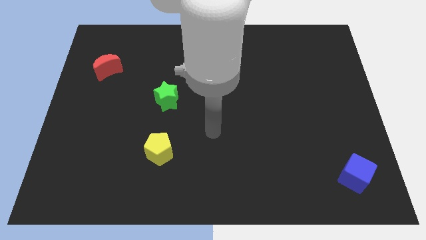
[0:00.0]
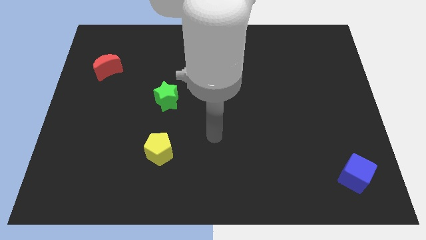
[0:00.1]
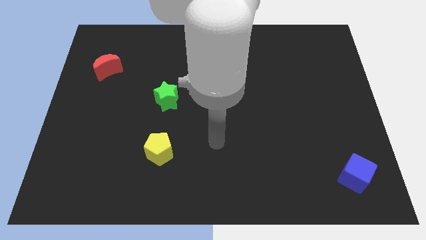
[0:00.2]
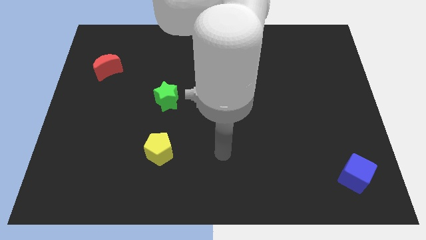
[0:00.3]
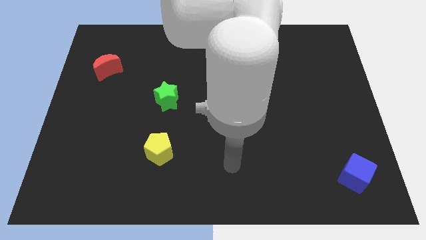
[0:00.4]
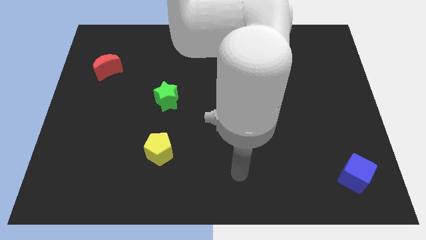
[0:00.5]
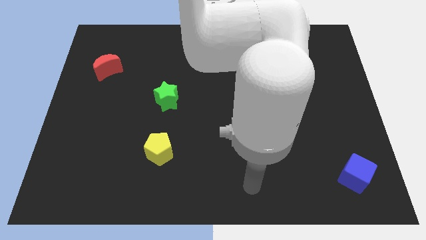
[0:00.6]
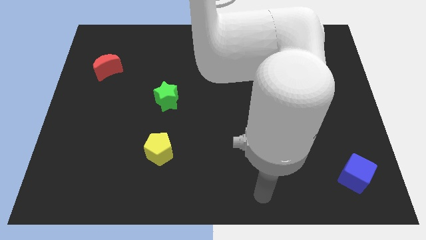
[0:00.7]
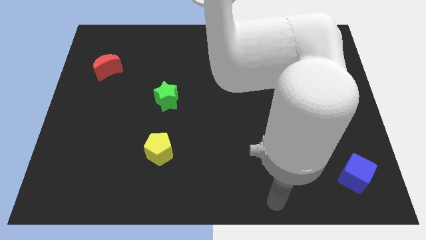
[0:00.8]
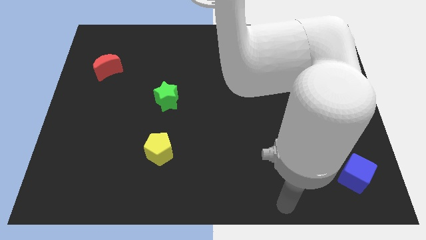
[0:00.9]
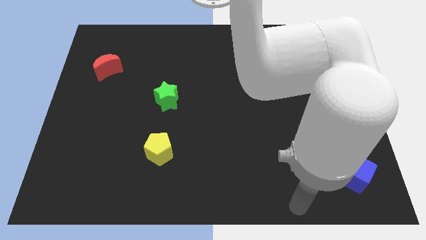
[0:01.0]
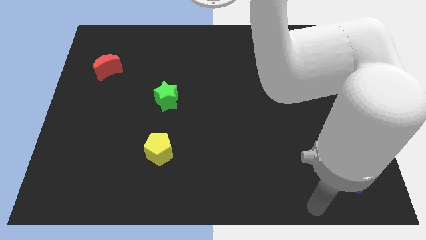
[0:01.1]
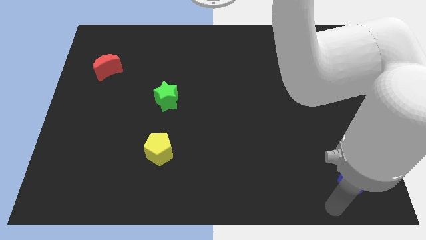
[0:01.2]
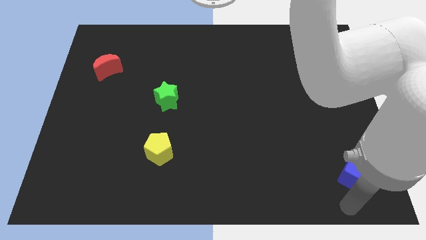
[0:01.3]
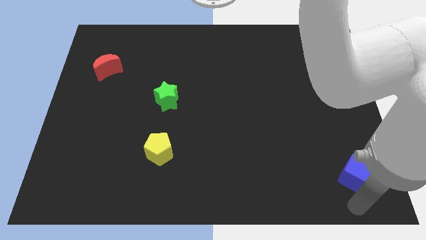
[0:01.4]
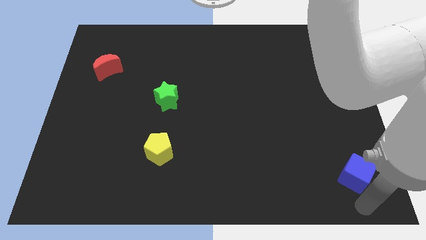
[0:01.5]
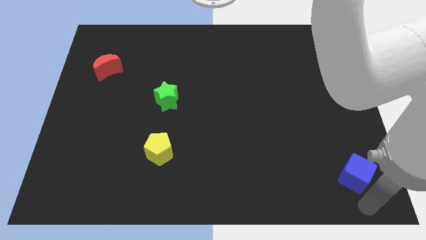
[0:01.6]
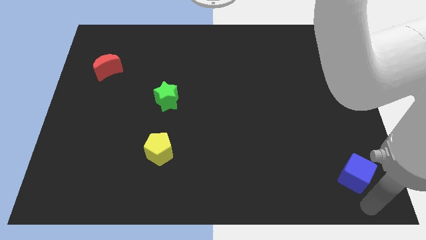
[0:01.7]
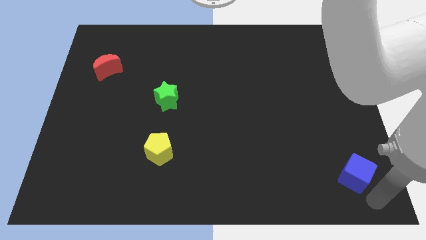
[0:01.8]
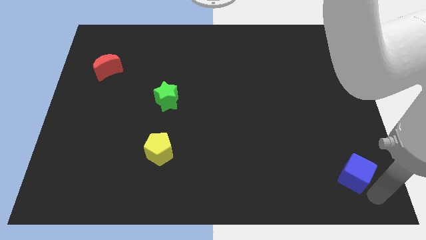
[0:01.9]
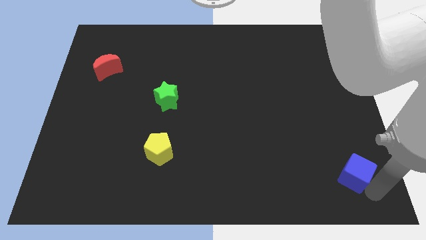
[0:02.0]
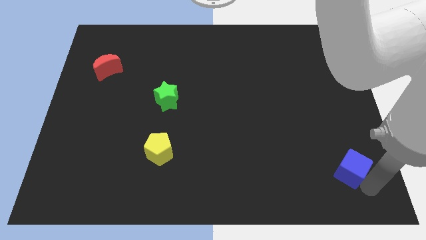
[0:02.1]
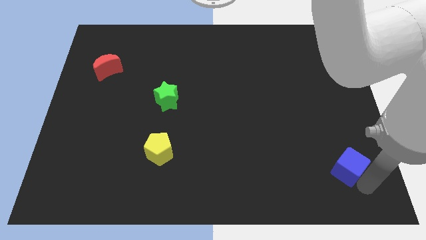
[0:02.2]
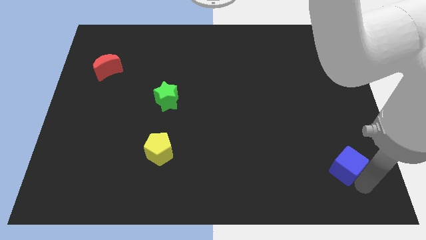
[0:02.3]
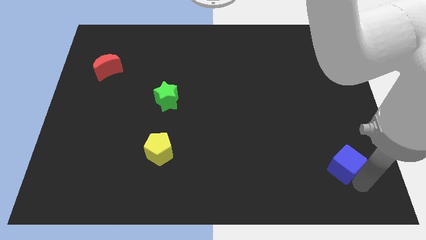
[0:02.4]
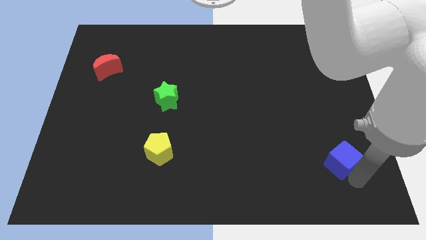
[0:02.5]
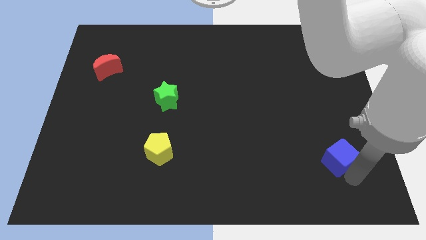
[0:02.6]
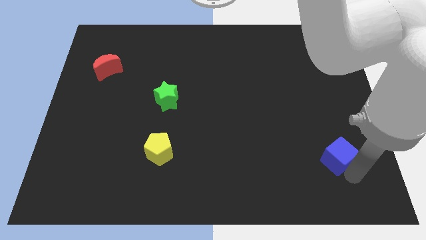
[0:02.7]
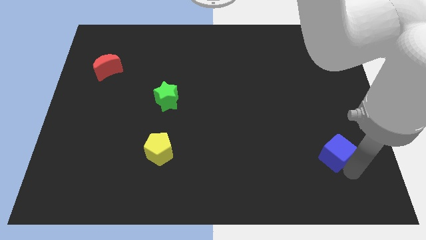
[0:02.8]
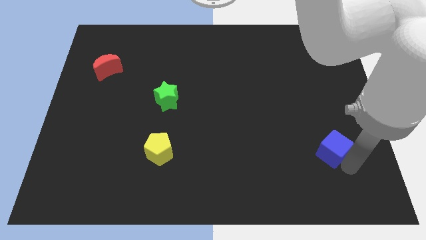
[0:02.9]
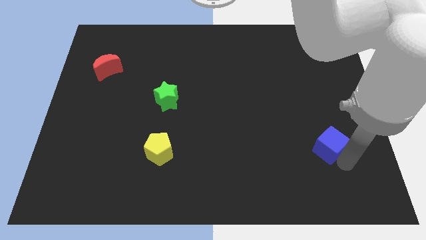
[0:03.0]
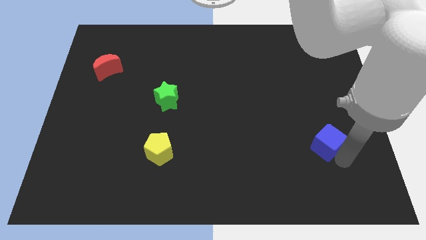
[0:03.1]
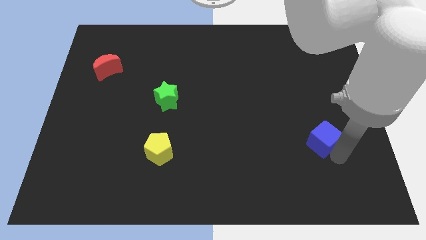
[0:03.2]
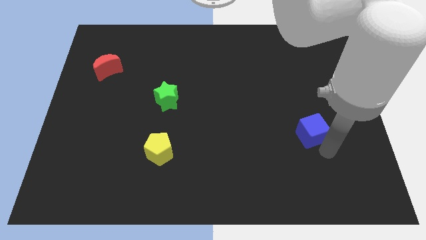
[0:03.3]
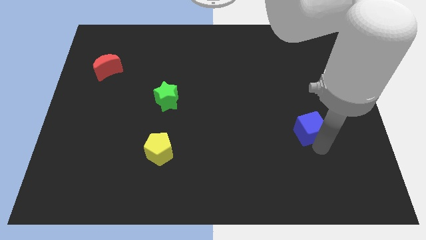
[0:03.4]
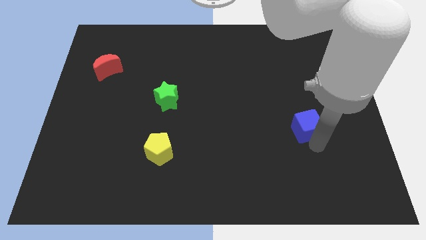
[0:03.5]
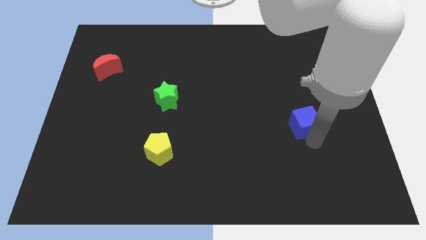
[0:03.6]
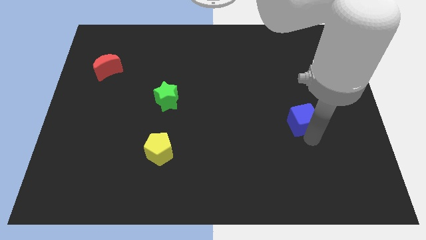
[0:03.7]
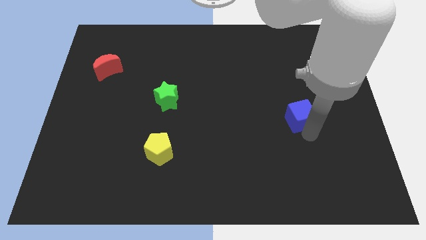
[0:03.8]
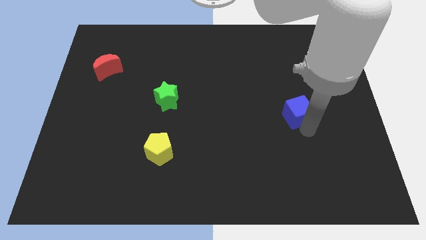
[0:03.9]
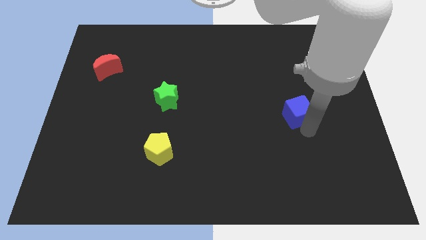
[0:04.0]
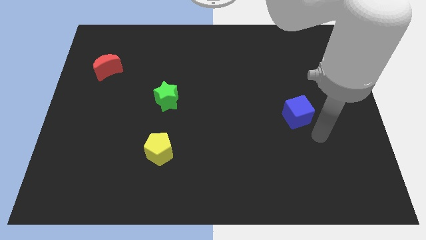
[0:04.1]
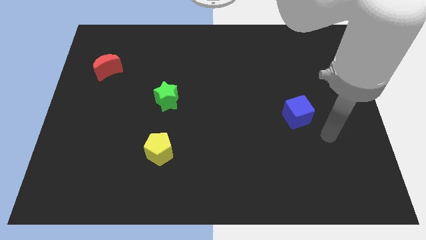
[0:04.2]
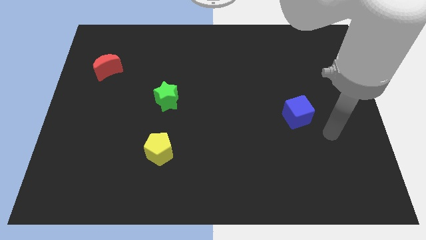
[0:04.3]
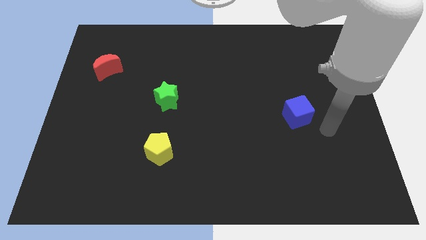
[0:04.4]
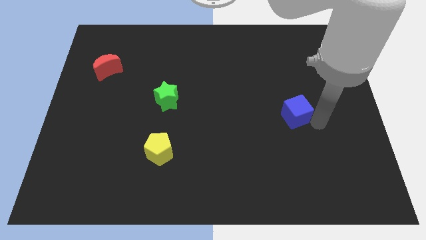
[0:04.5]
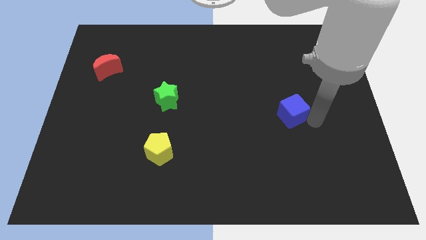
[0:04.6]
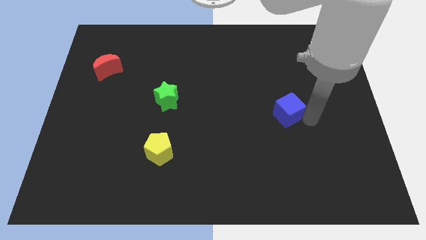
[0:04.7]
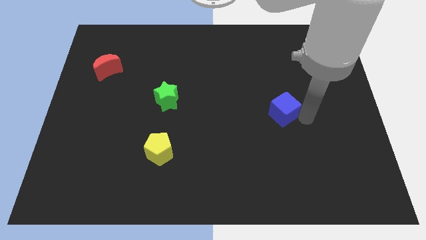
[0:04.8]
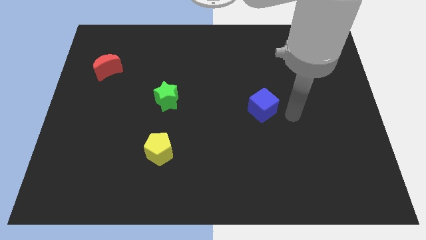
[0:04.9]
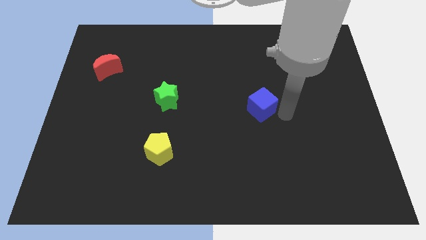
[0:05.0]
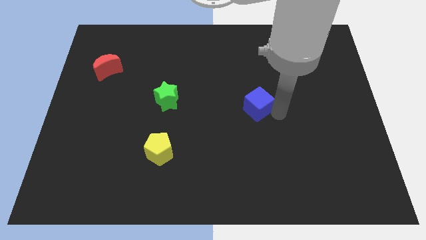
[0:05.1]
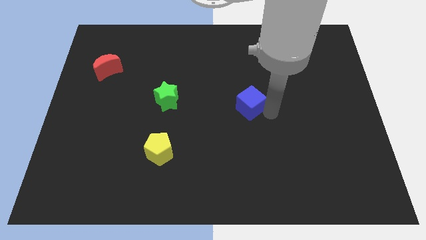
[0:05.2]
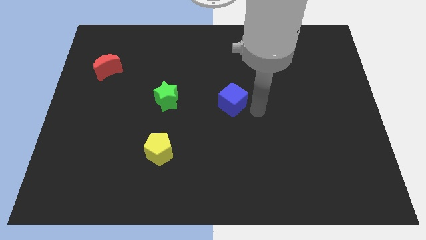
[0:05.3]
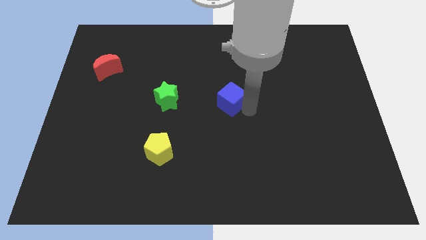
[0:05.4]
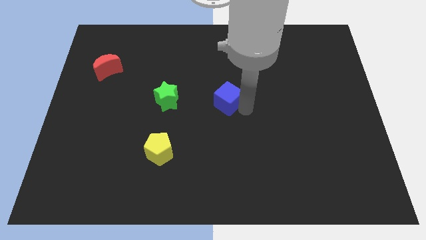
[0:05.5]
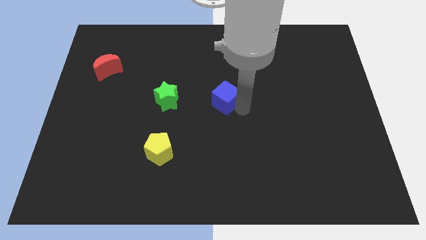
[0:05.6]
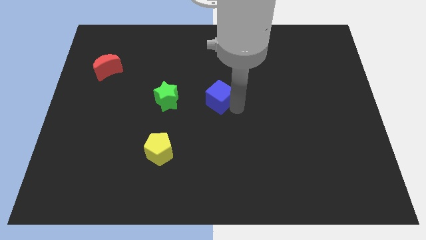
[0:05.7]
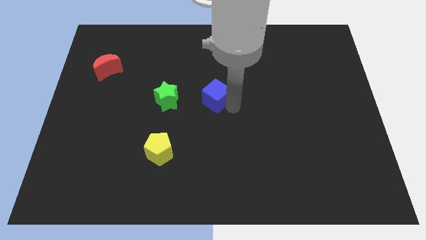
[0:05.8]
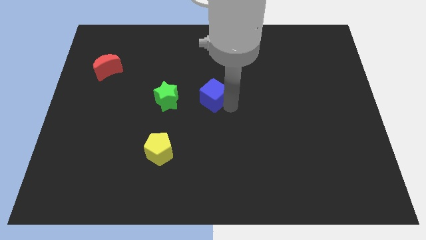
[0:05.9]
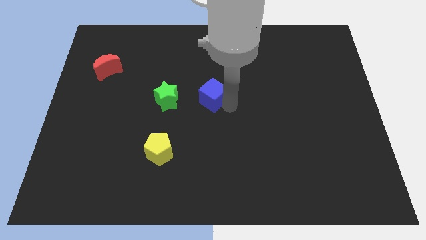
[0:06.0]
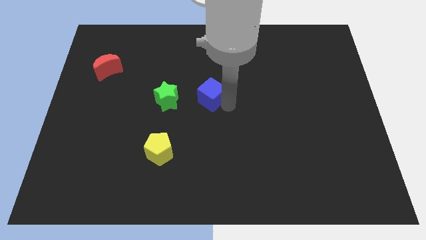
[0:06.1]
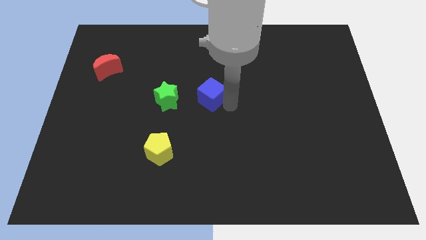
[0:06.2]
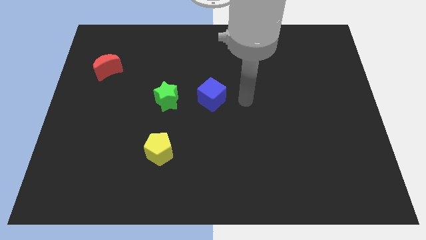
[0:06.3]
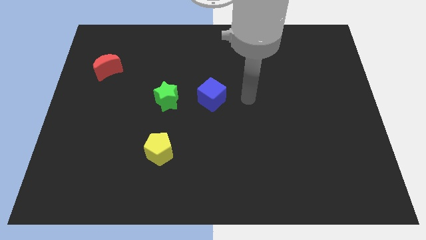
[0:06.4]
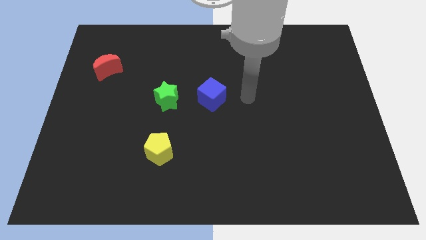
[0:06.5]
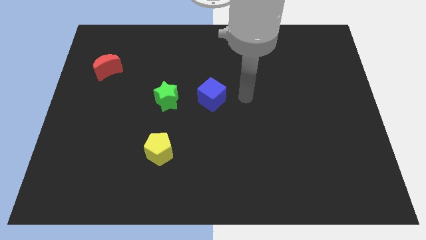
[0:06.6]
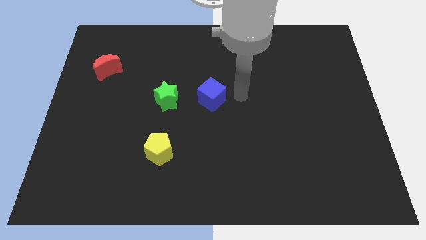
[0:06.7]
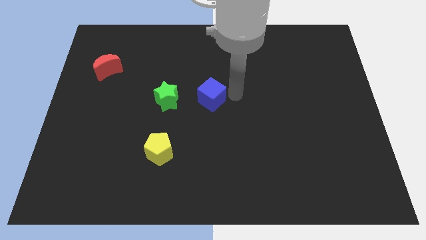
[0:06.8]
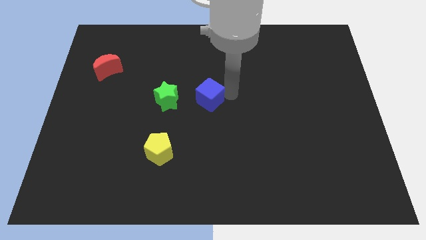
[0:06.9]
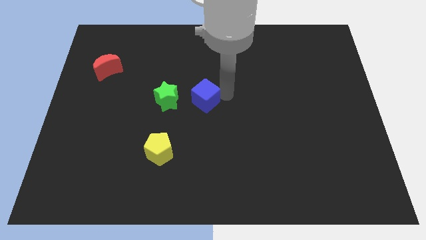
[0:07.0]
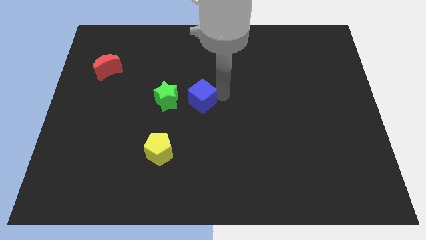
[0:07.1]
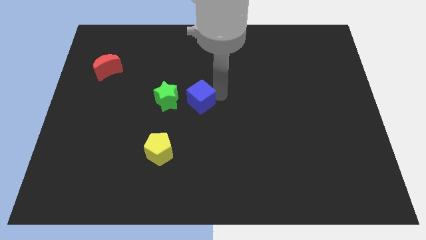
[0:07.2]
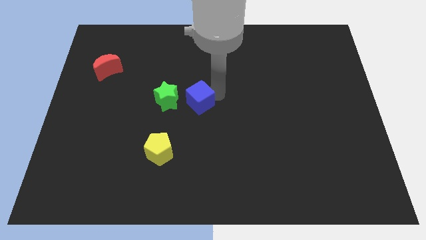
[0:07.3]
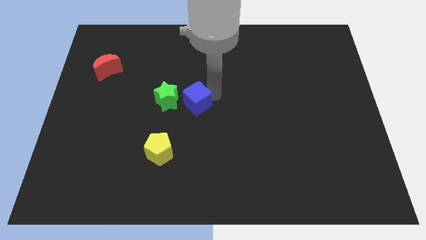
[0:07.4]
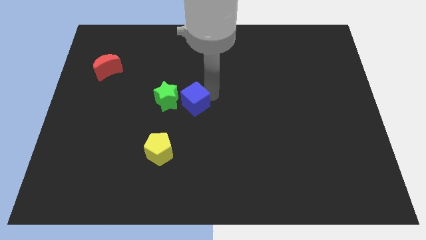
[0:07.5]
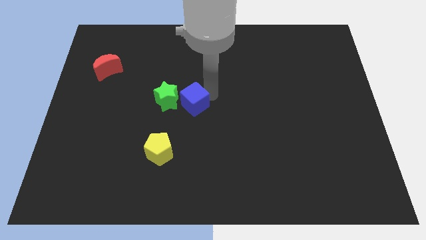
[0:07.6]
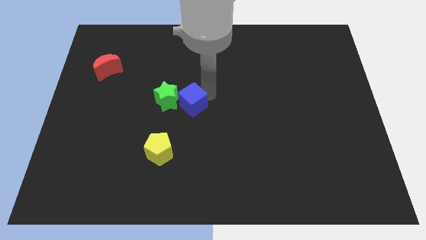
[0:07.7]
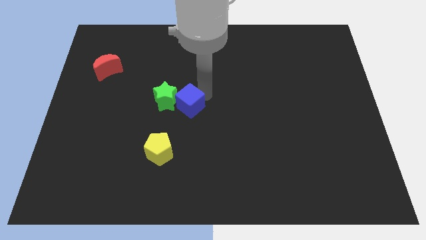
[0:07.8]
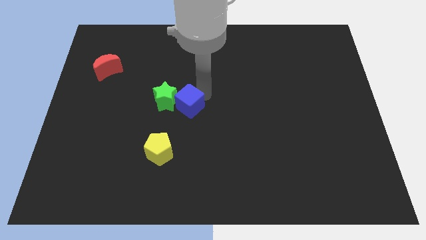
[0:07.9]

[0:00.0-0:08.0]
put the blue block towards the green block

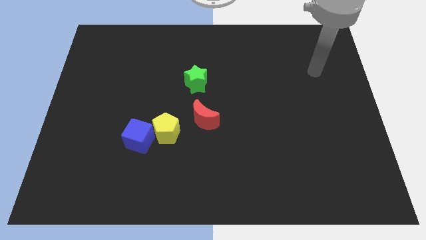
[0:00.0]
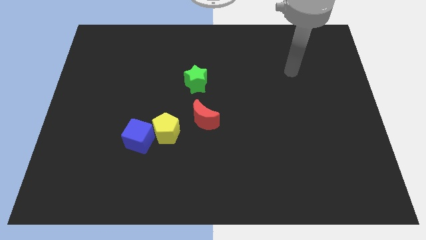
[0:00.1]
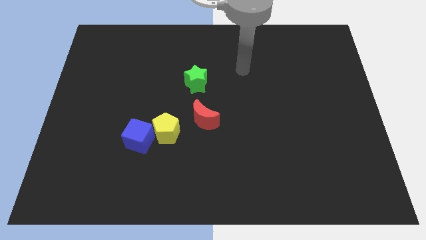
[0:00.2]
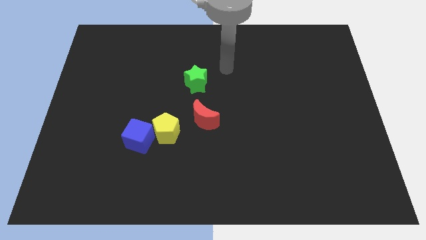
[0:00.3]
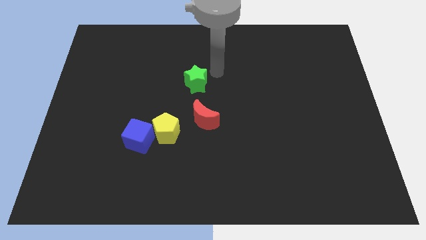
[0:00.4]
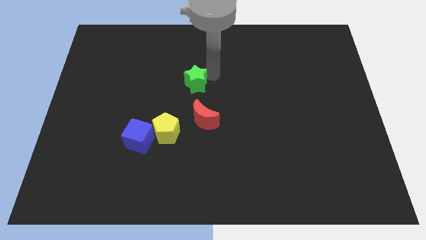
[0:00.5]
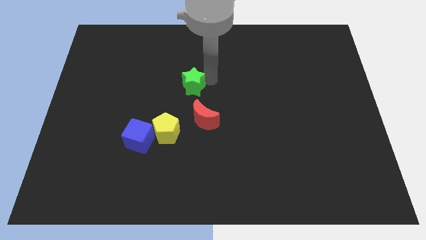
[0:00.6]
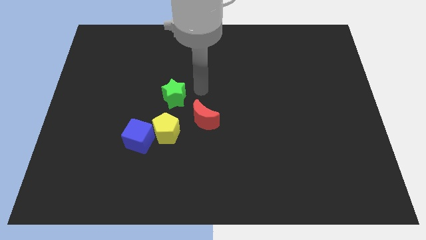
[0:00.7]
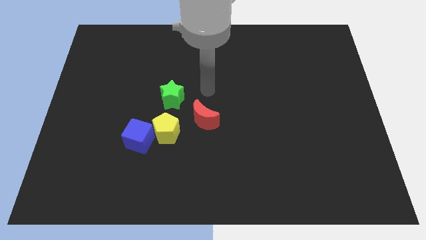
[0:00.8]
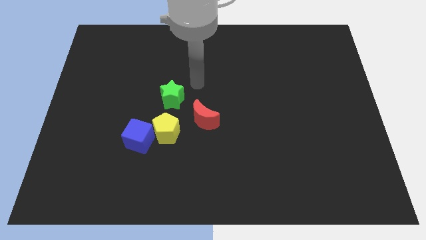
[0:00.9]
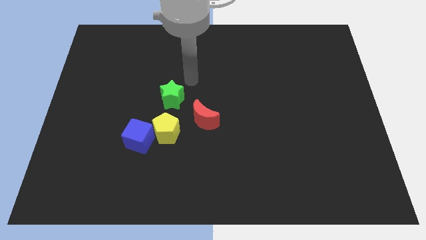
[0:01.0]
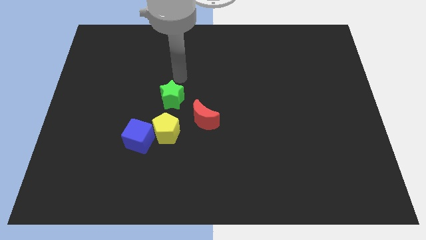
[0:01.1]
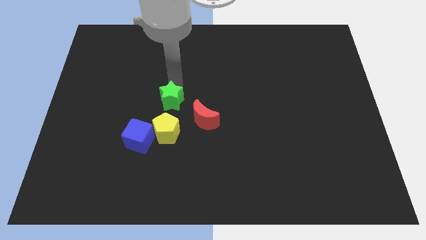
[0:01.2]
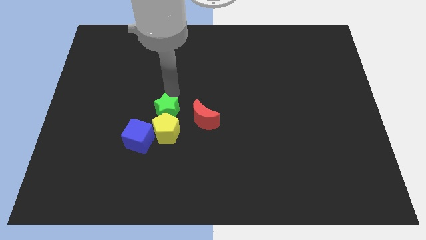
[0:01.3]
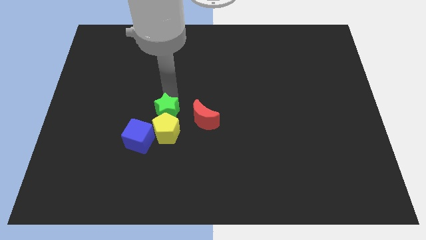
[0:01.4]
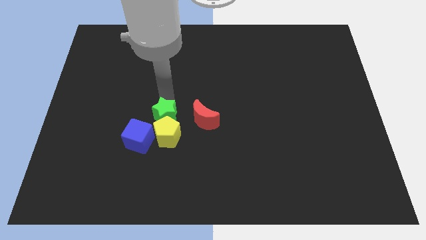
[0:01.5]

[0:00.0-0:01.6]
push the green block to the yellow block
